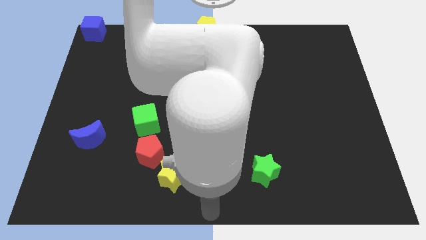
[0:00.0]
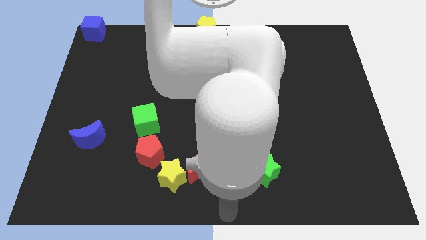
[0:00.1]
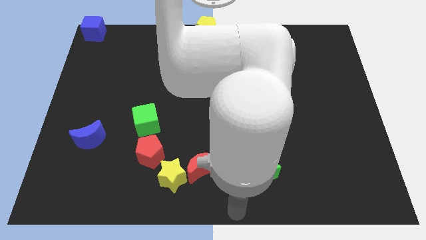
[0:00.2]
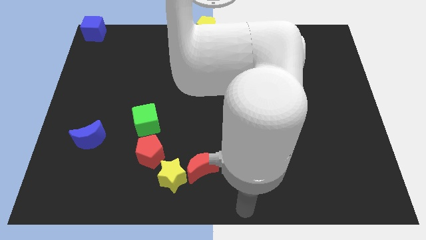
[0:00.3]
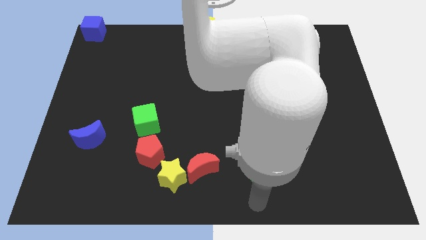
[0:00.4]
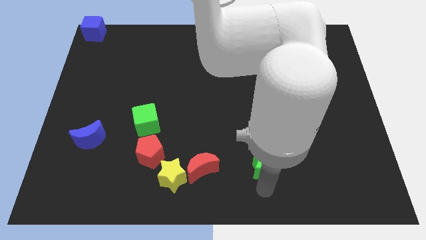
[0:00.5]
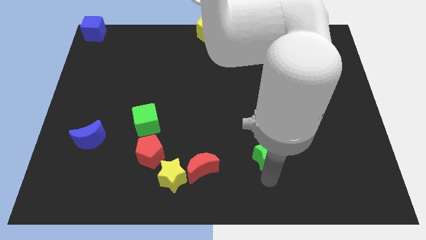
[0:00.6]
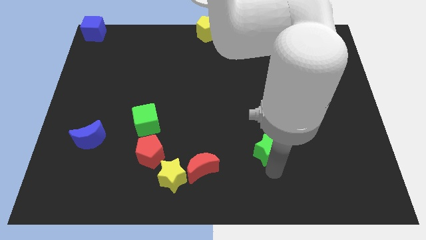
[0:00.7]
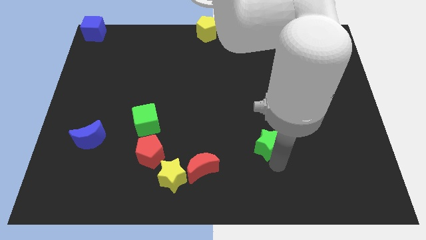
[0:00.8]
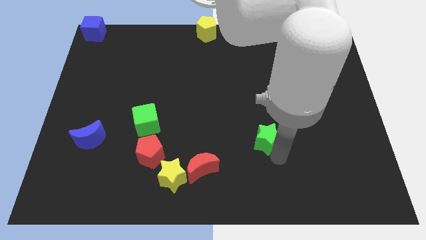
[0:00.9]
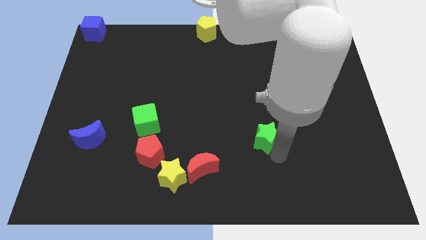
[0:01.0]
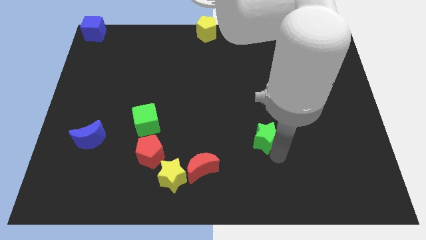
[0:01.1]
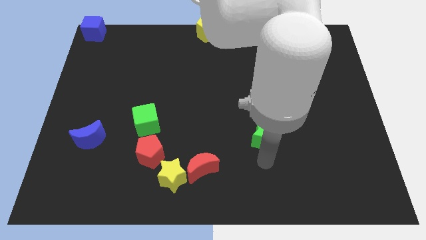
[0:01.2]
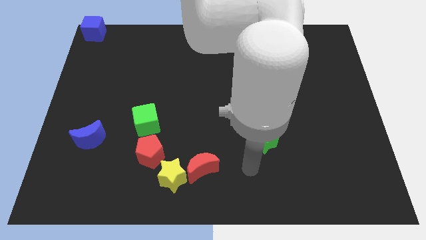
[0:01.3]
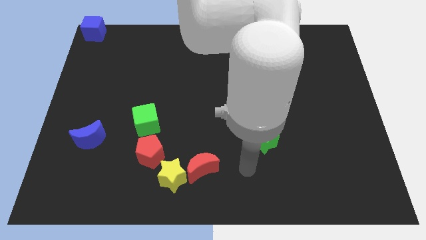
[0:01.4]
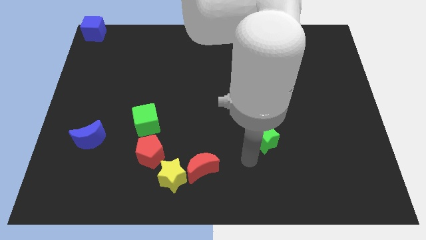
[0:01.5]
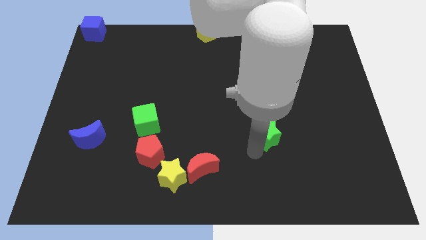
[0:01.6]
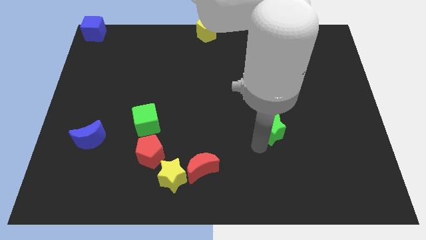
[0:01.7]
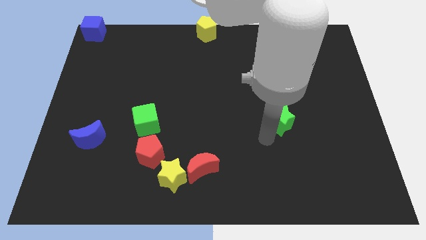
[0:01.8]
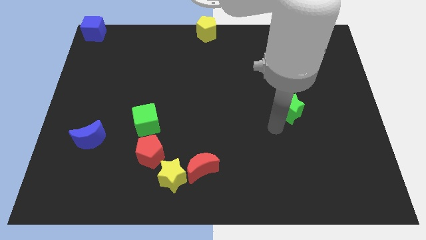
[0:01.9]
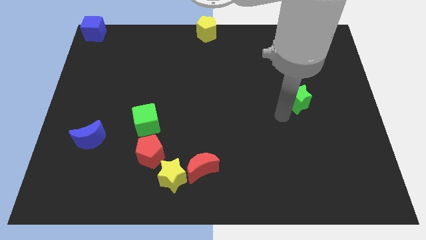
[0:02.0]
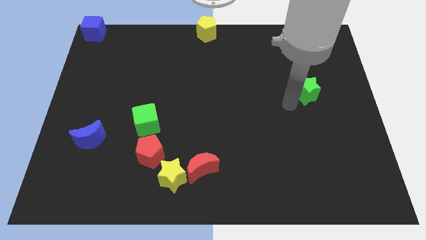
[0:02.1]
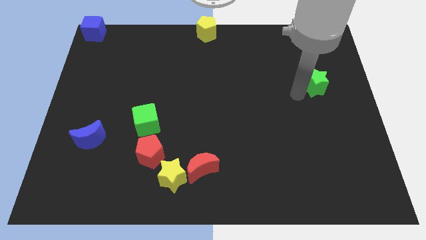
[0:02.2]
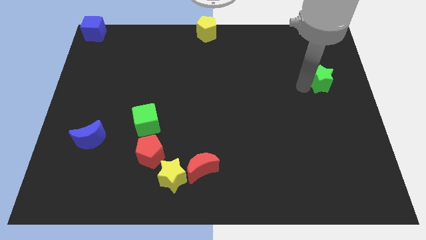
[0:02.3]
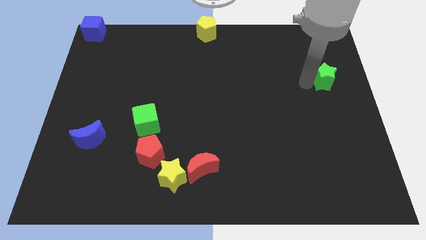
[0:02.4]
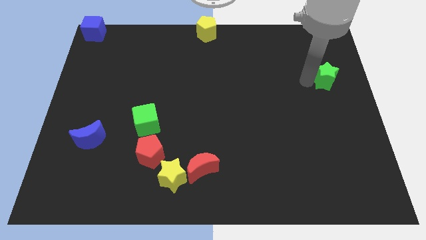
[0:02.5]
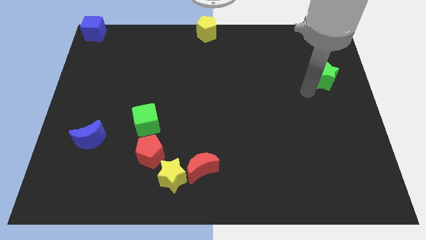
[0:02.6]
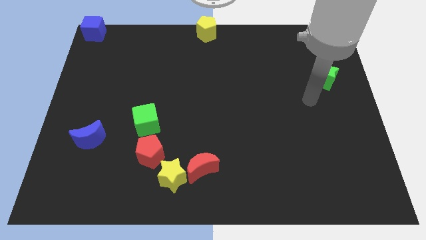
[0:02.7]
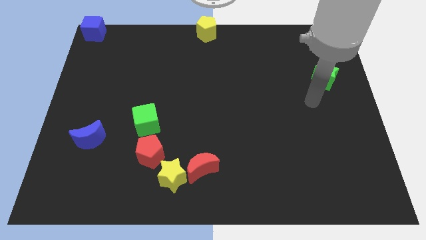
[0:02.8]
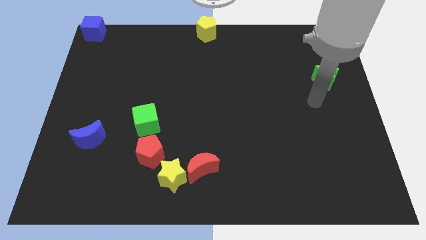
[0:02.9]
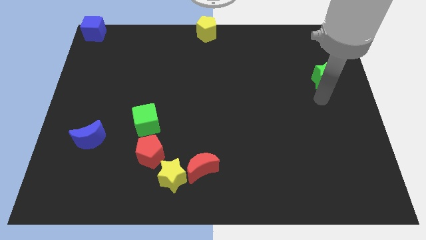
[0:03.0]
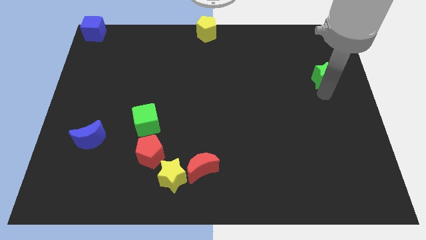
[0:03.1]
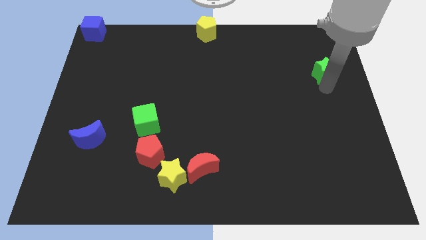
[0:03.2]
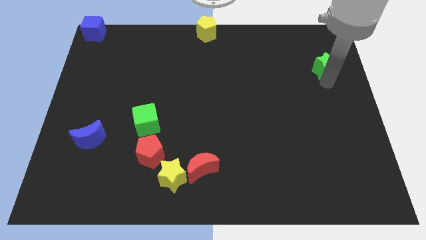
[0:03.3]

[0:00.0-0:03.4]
move the green star to the top side fo the table

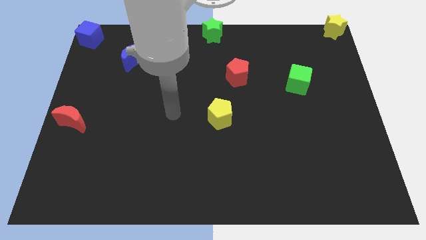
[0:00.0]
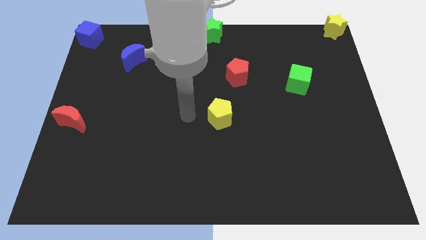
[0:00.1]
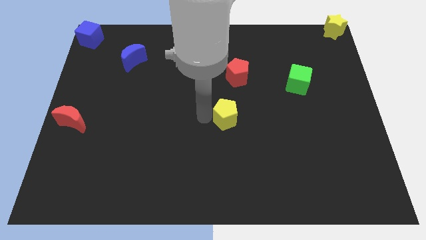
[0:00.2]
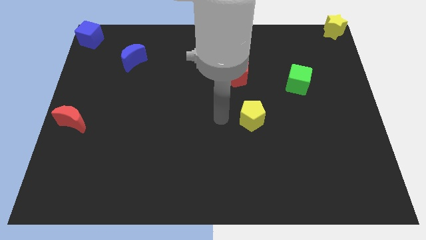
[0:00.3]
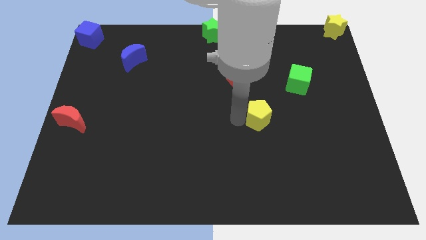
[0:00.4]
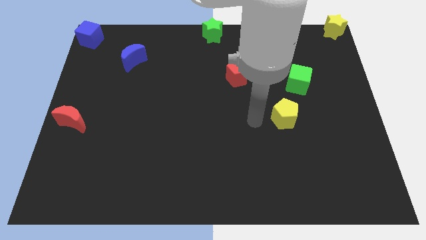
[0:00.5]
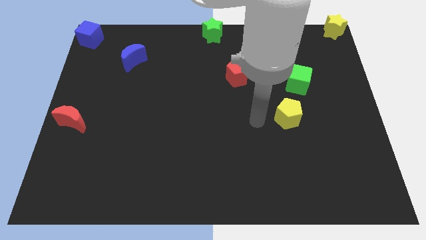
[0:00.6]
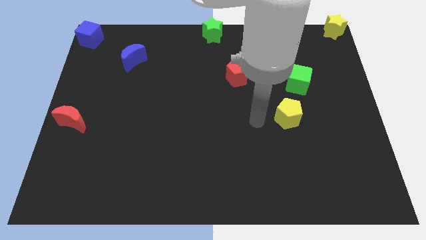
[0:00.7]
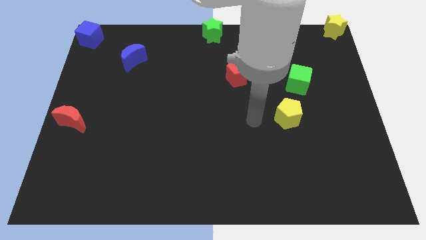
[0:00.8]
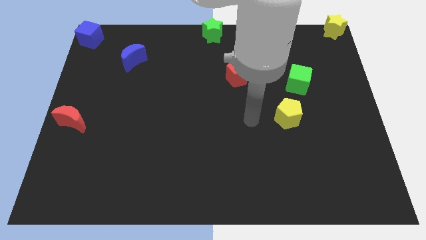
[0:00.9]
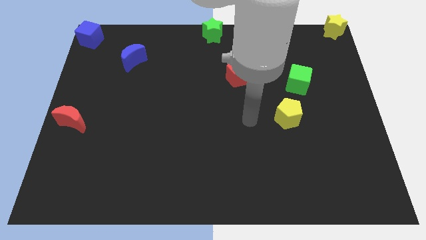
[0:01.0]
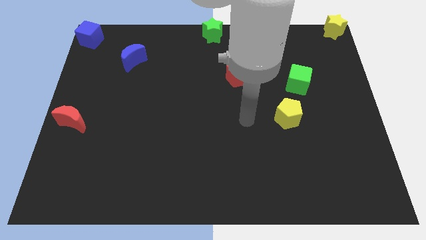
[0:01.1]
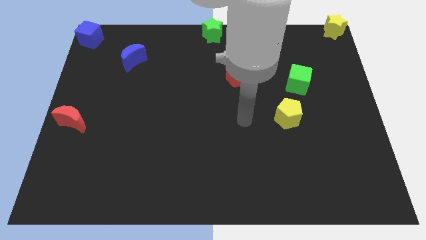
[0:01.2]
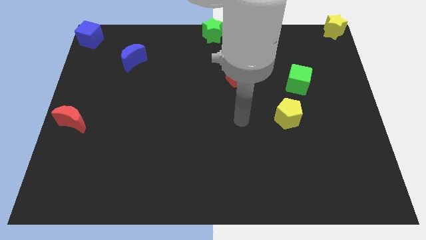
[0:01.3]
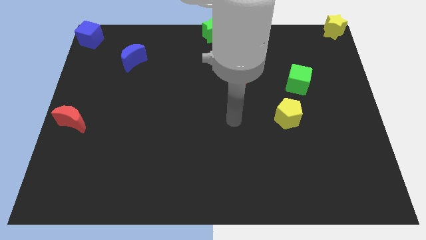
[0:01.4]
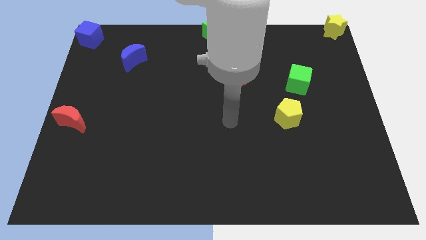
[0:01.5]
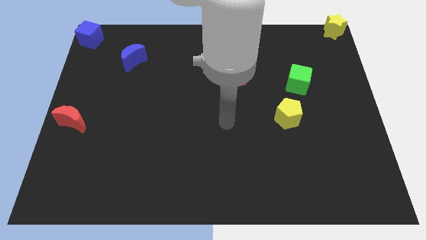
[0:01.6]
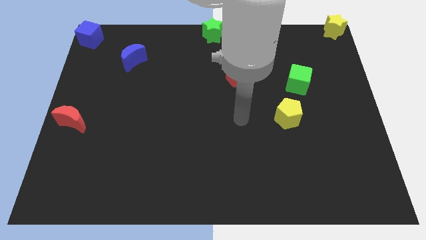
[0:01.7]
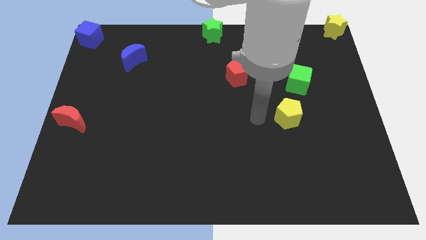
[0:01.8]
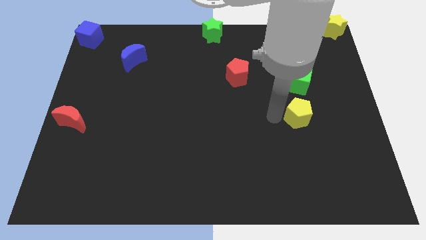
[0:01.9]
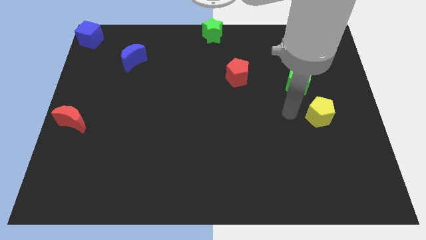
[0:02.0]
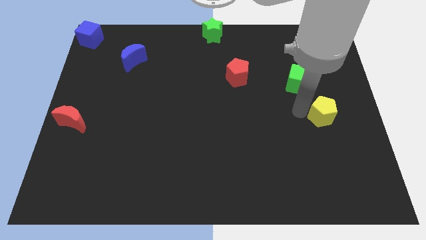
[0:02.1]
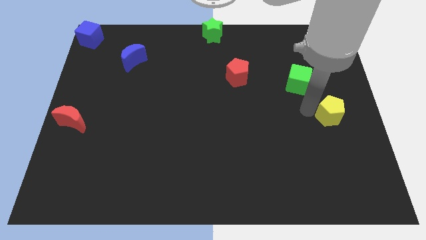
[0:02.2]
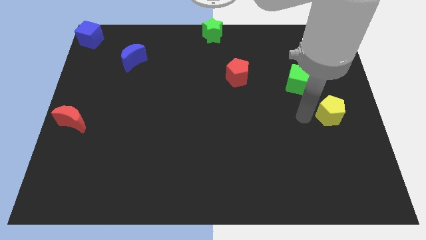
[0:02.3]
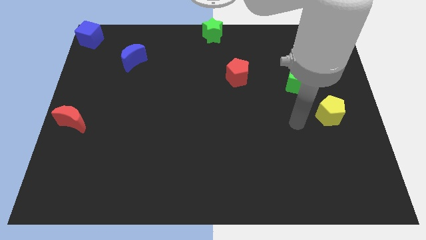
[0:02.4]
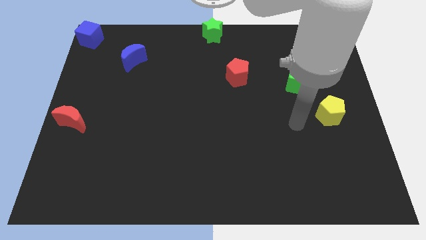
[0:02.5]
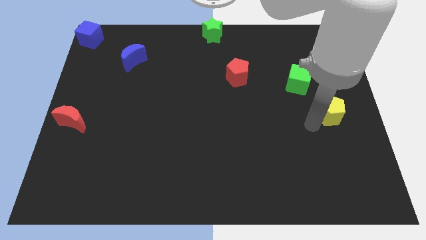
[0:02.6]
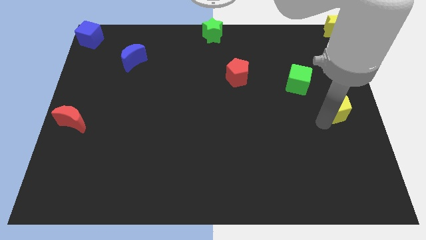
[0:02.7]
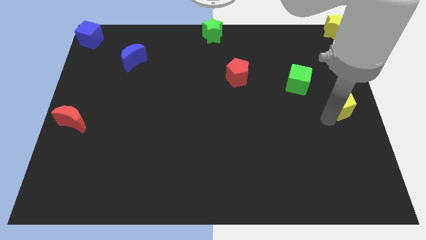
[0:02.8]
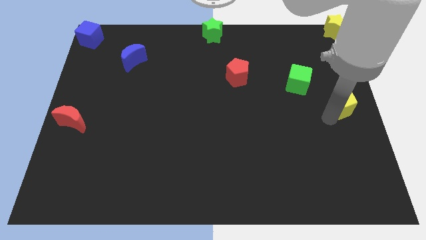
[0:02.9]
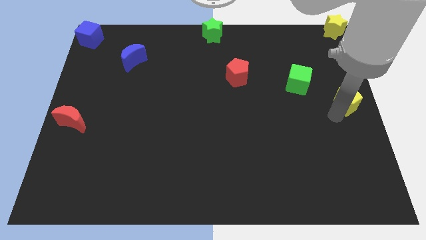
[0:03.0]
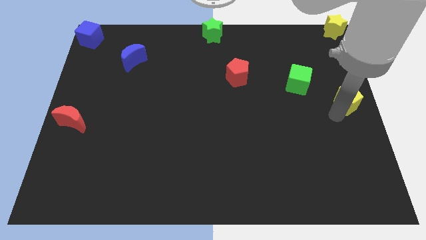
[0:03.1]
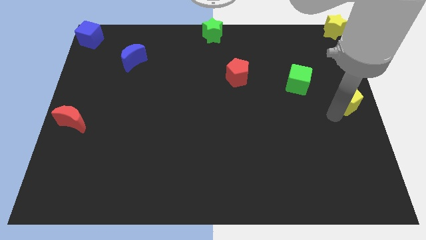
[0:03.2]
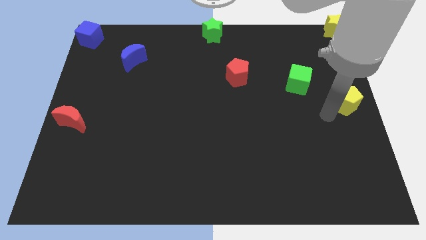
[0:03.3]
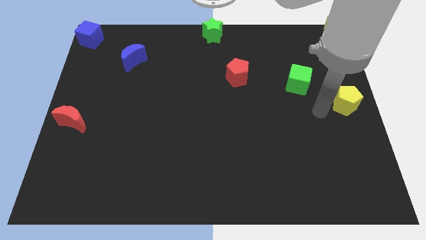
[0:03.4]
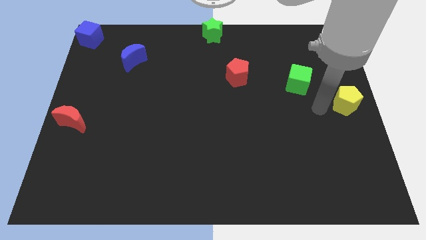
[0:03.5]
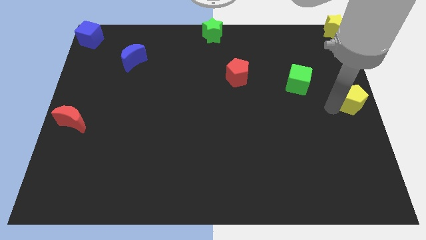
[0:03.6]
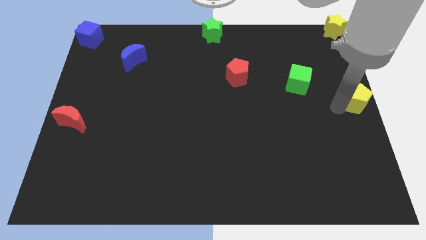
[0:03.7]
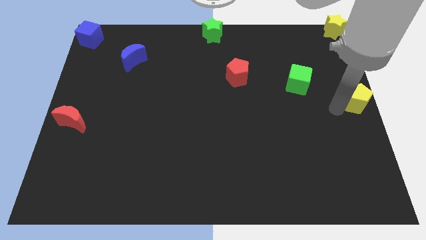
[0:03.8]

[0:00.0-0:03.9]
push the yellow pentagon to the right center of the board

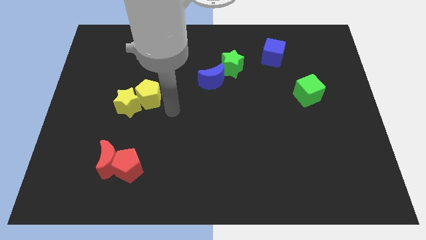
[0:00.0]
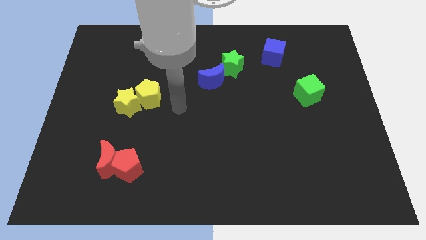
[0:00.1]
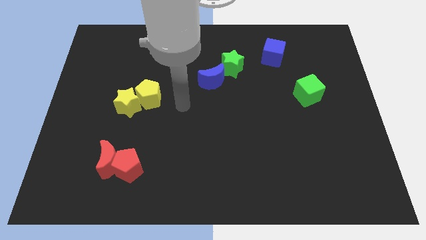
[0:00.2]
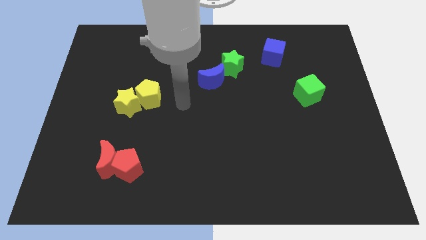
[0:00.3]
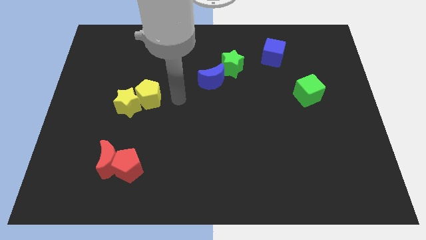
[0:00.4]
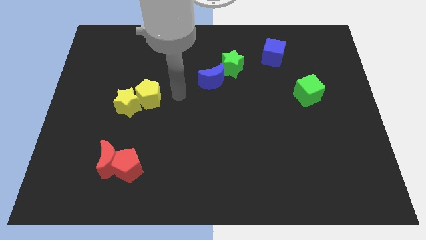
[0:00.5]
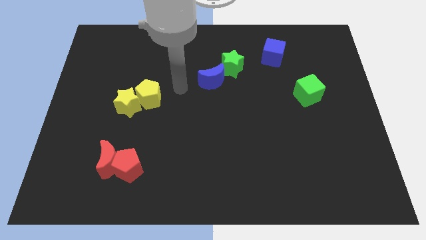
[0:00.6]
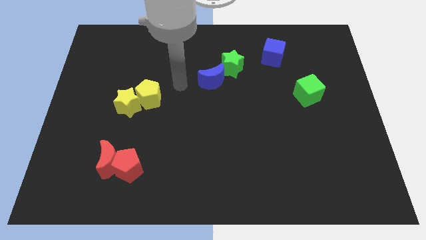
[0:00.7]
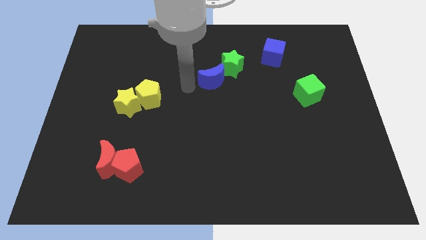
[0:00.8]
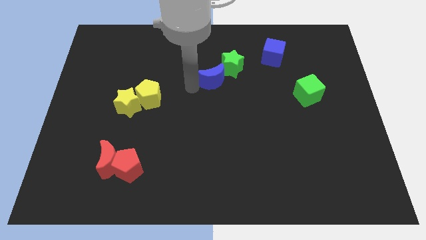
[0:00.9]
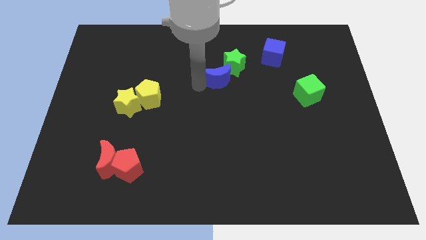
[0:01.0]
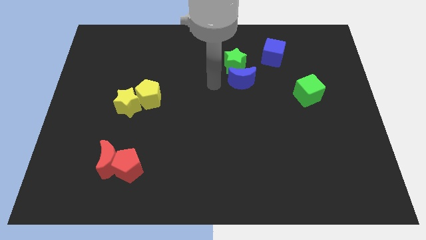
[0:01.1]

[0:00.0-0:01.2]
push the blue crescent to the bottom of the green star

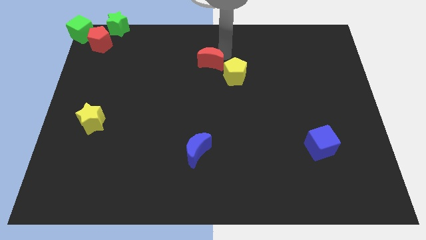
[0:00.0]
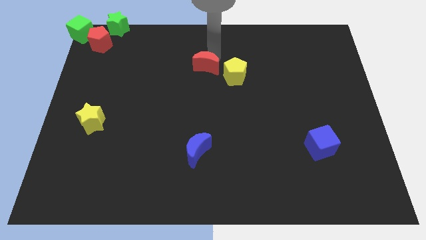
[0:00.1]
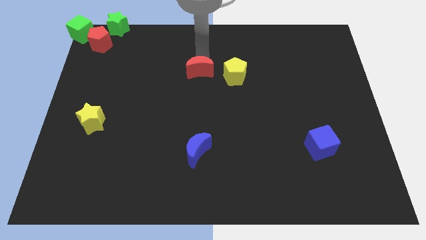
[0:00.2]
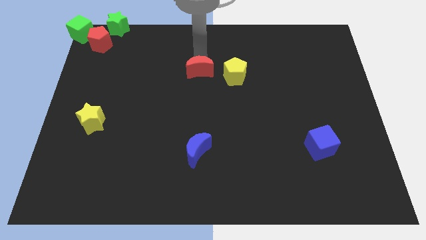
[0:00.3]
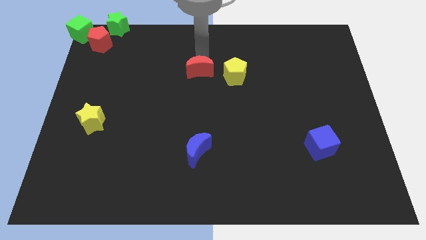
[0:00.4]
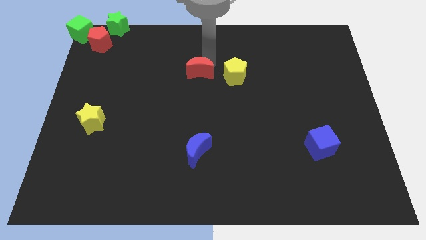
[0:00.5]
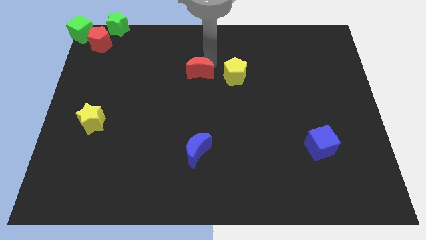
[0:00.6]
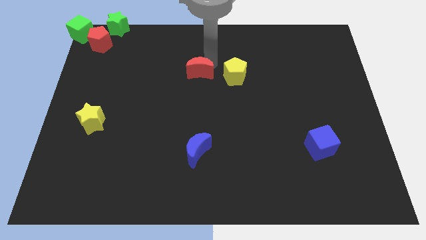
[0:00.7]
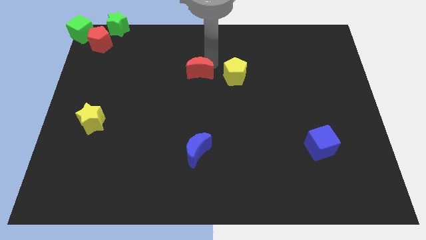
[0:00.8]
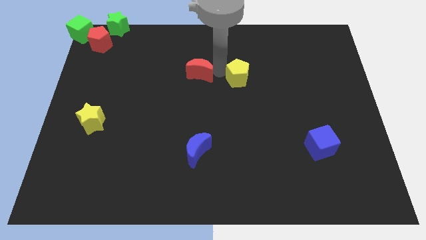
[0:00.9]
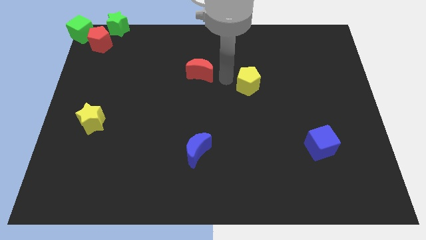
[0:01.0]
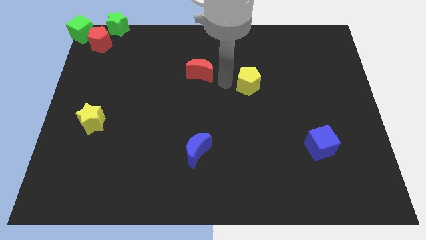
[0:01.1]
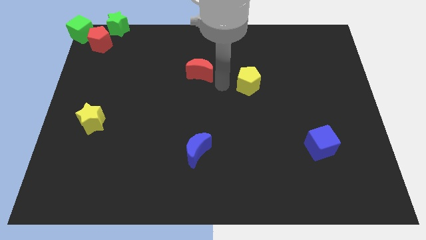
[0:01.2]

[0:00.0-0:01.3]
separate the red crescent from the yellow pentagon
